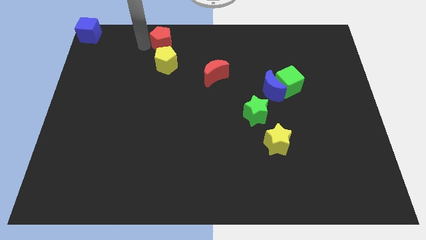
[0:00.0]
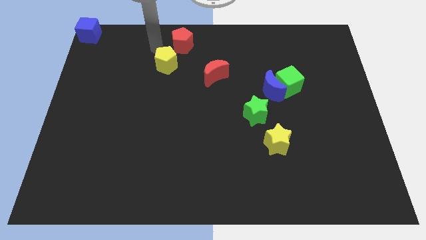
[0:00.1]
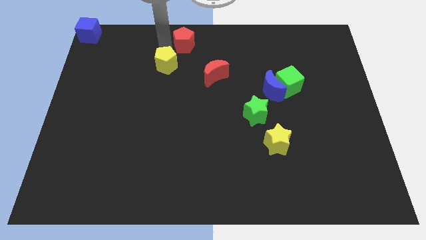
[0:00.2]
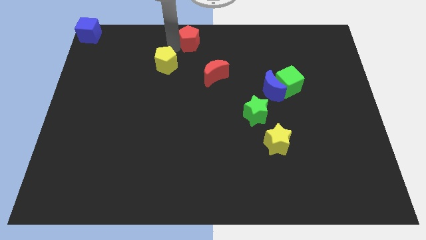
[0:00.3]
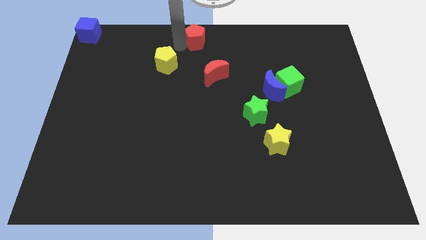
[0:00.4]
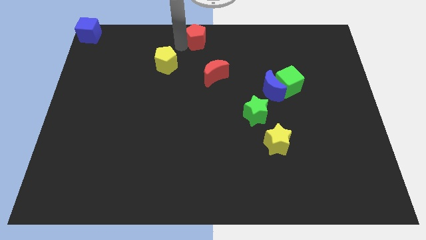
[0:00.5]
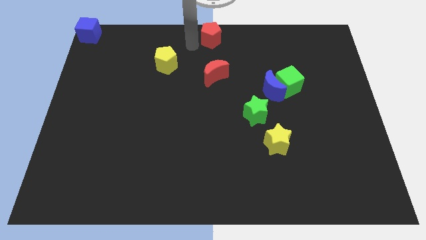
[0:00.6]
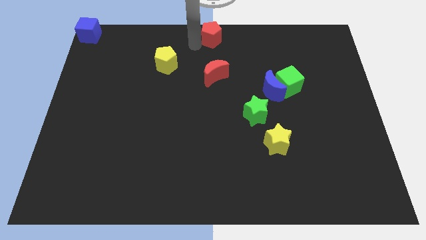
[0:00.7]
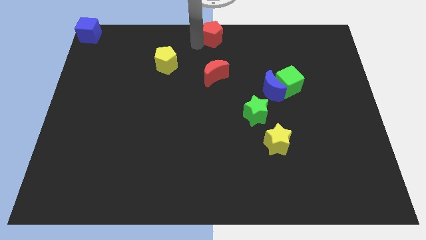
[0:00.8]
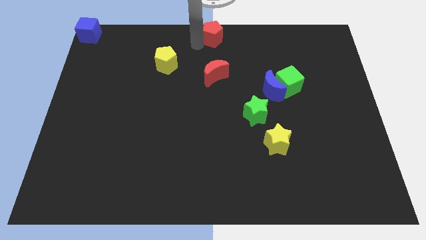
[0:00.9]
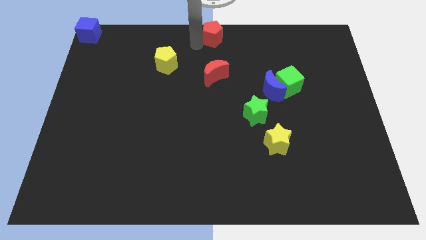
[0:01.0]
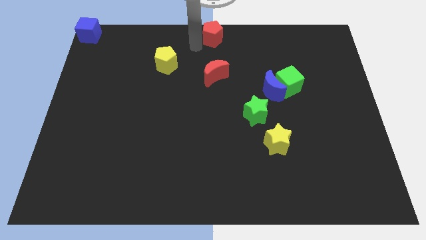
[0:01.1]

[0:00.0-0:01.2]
move the red pentagon towards the top center

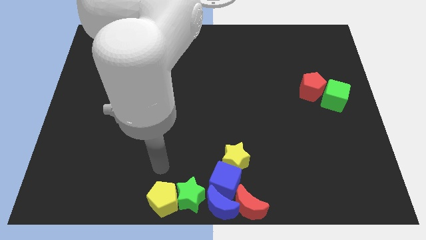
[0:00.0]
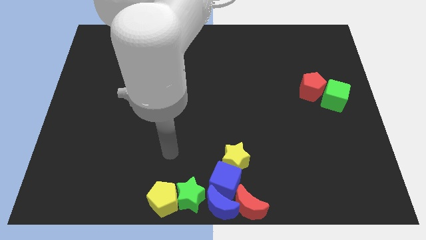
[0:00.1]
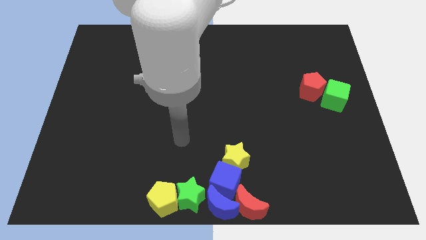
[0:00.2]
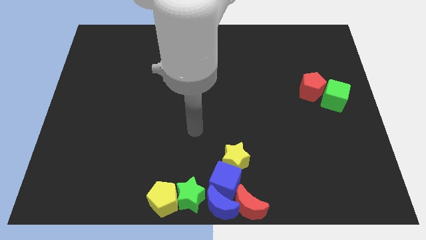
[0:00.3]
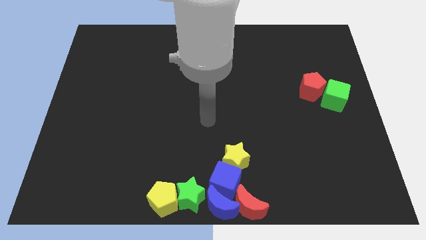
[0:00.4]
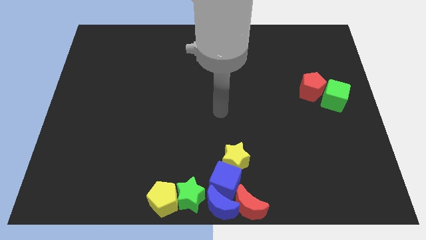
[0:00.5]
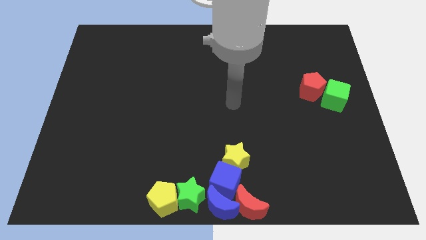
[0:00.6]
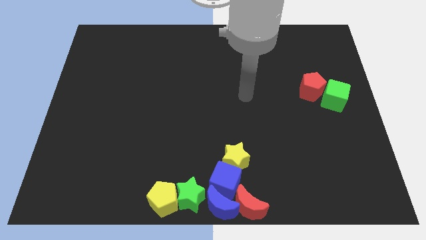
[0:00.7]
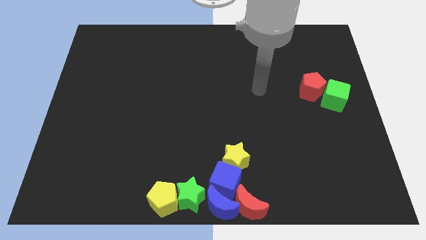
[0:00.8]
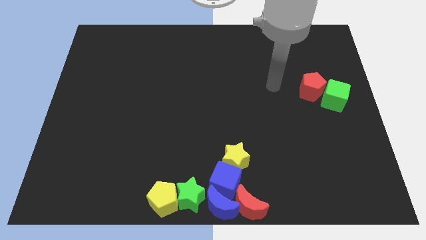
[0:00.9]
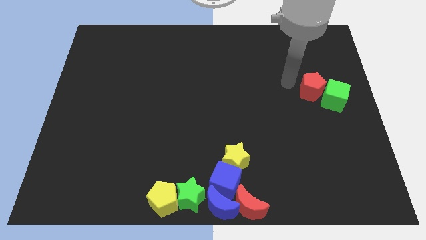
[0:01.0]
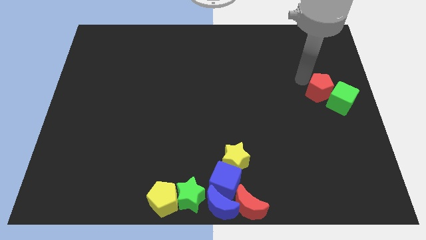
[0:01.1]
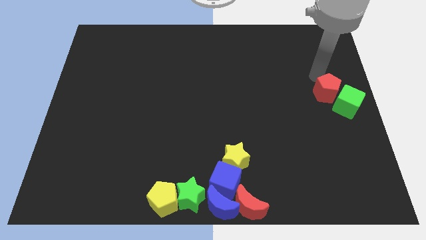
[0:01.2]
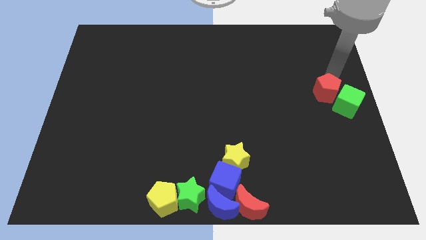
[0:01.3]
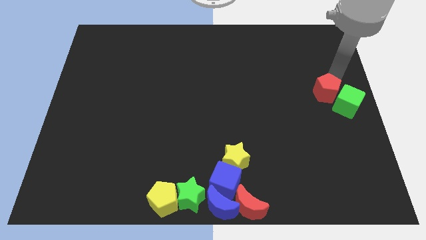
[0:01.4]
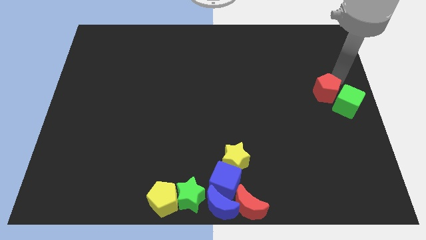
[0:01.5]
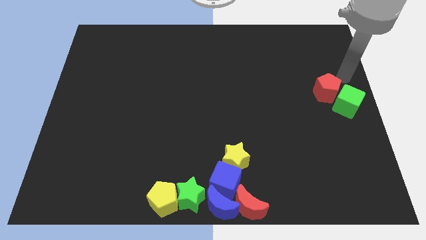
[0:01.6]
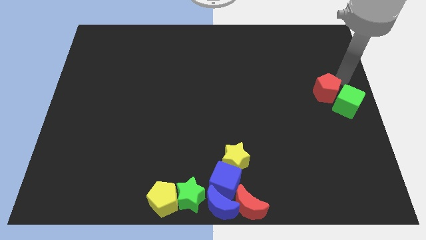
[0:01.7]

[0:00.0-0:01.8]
push the red pentagon and green cube to the right side

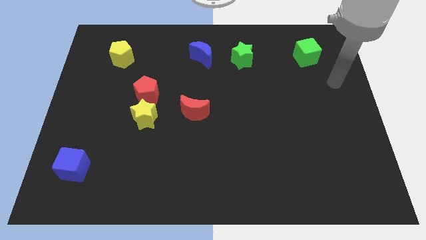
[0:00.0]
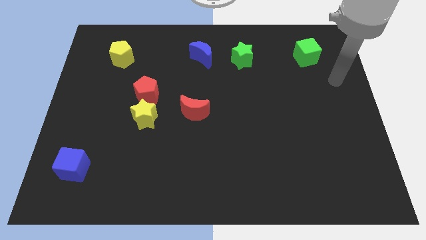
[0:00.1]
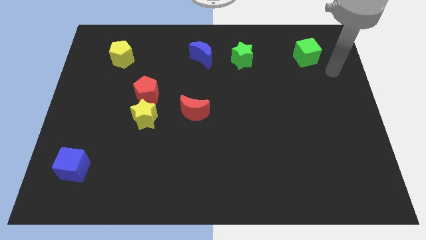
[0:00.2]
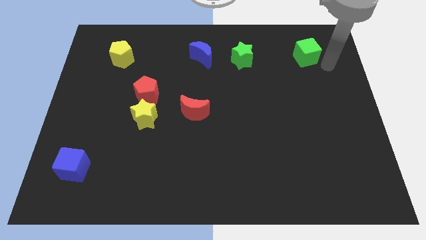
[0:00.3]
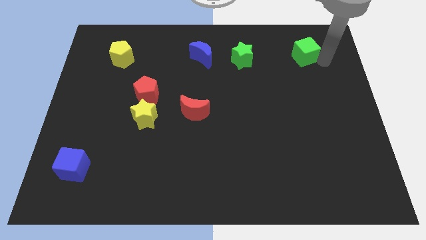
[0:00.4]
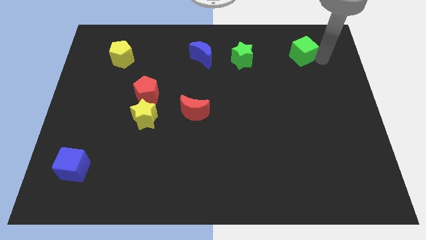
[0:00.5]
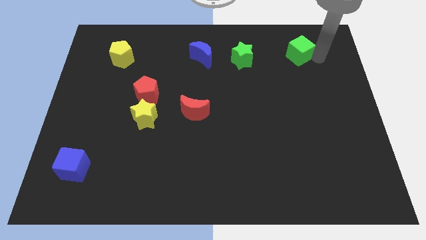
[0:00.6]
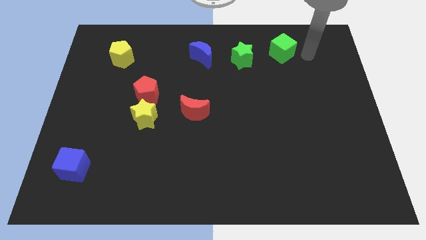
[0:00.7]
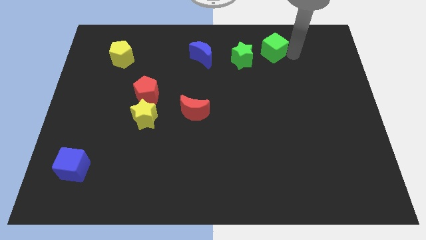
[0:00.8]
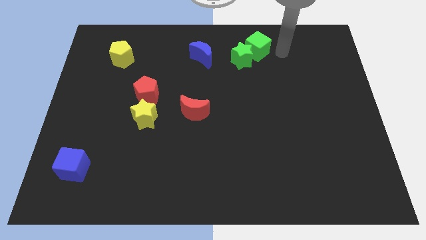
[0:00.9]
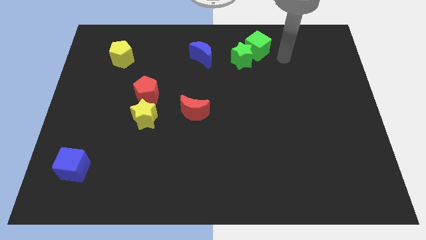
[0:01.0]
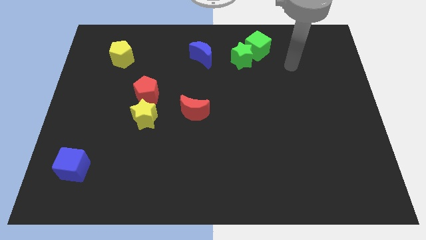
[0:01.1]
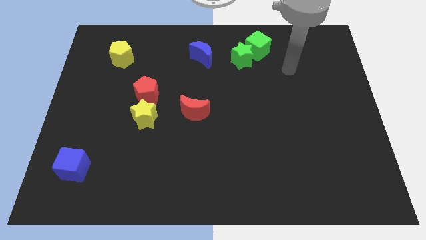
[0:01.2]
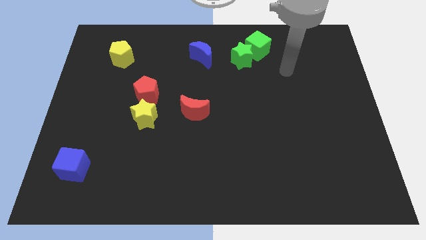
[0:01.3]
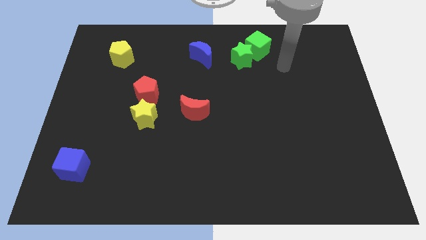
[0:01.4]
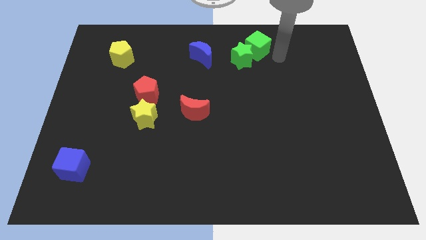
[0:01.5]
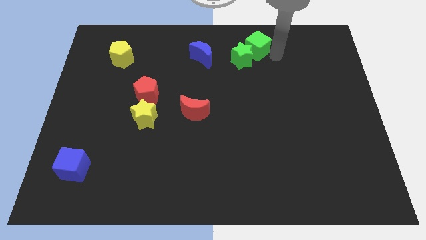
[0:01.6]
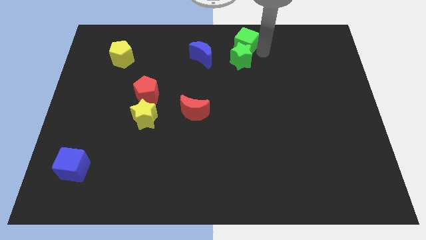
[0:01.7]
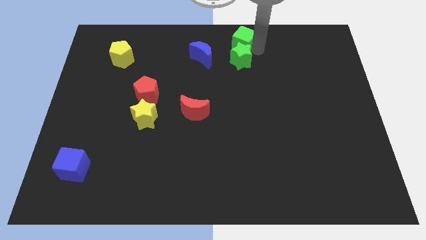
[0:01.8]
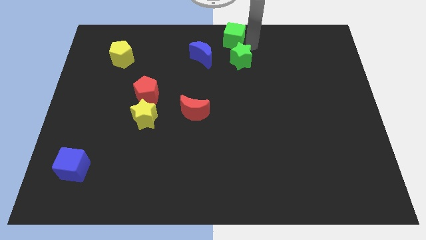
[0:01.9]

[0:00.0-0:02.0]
put the green cube above the green star

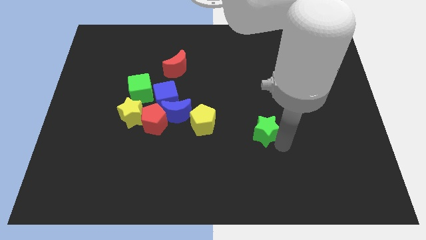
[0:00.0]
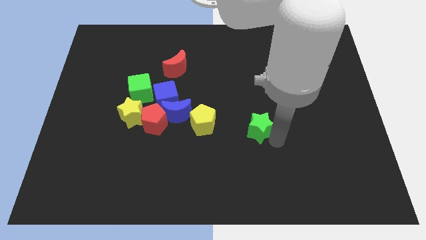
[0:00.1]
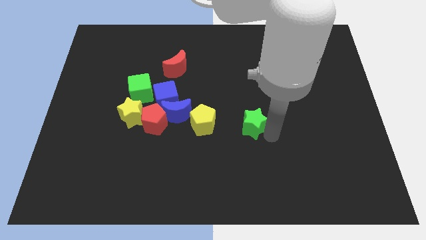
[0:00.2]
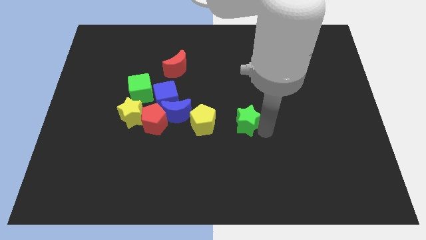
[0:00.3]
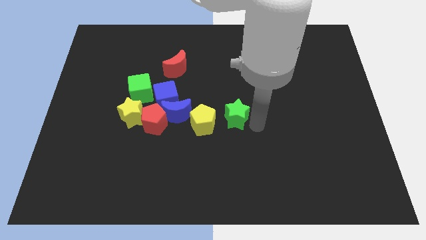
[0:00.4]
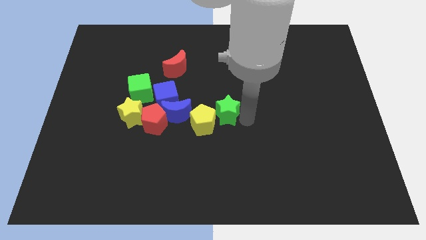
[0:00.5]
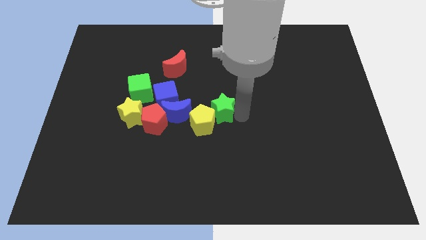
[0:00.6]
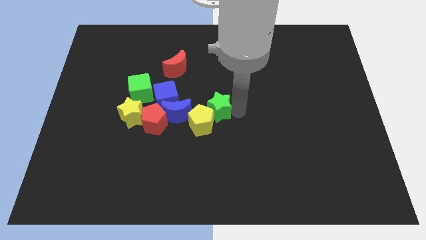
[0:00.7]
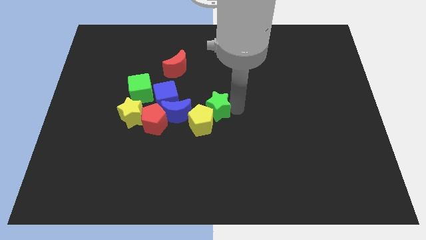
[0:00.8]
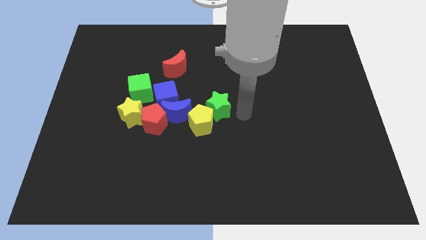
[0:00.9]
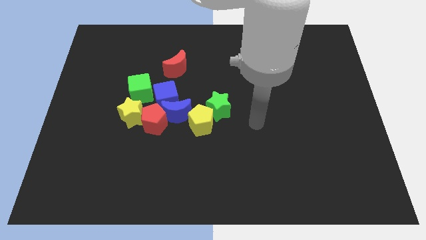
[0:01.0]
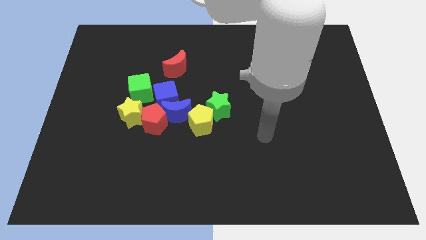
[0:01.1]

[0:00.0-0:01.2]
move the green star into the yellow pentagon

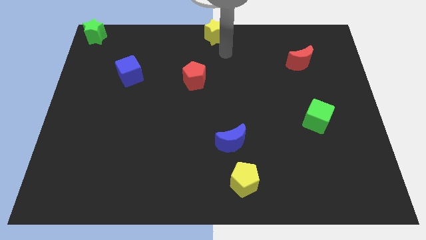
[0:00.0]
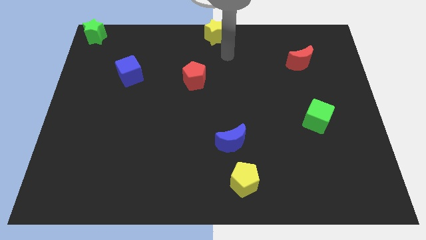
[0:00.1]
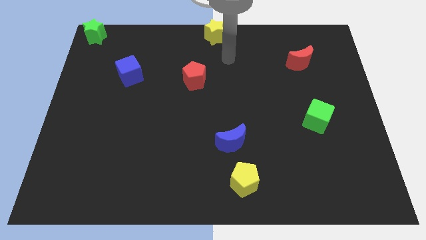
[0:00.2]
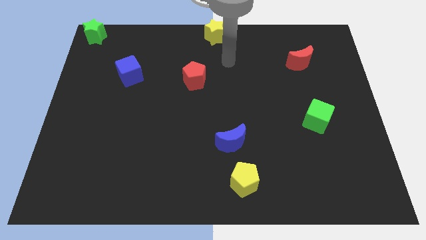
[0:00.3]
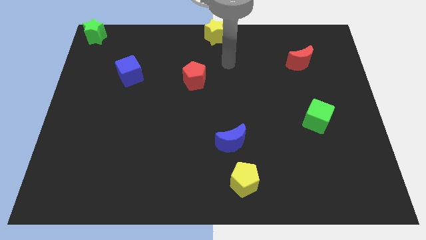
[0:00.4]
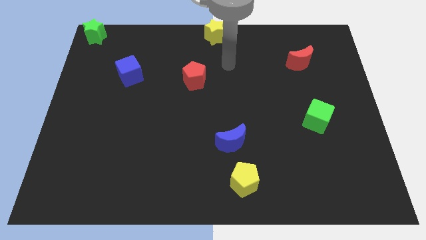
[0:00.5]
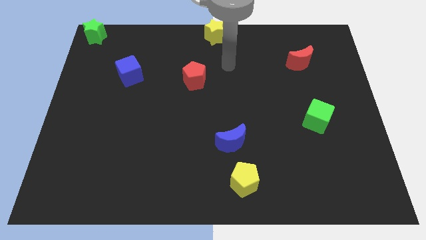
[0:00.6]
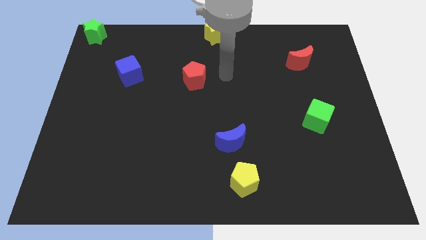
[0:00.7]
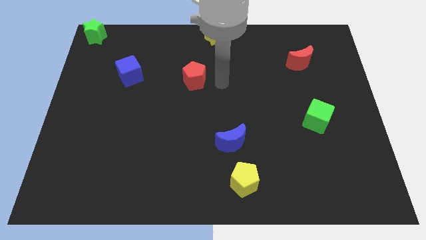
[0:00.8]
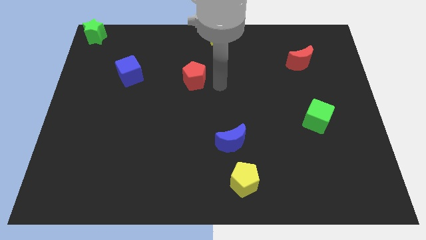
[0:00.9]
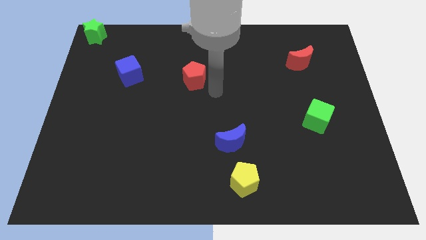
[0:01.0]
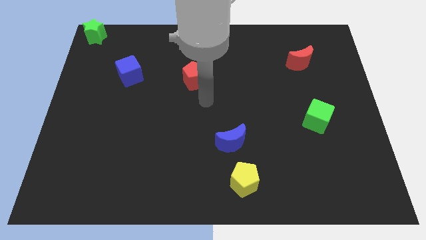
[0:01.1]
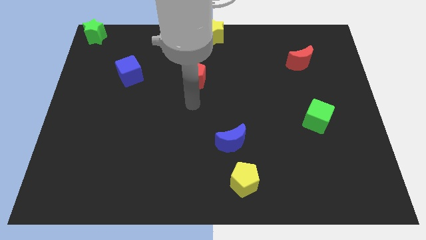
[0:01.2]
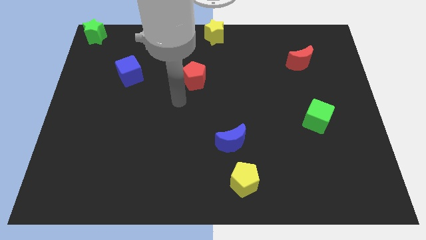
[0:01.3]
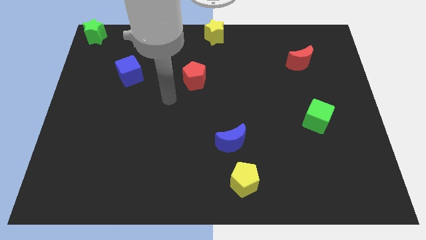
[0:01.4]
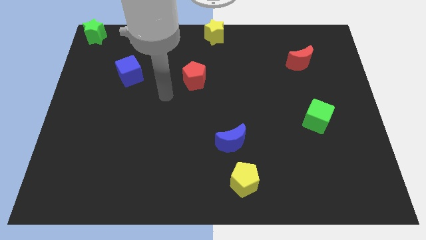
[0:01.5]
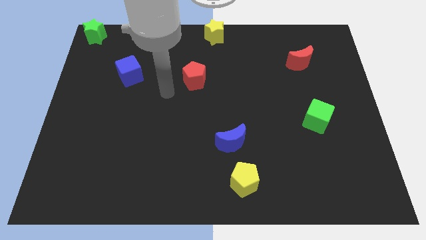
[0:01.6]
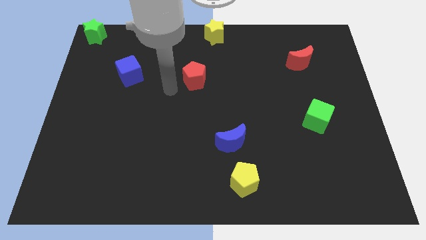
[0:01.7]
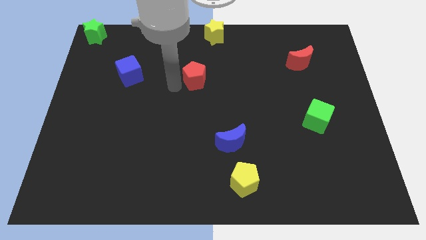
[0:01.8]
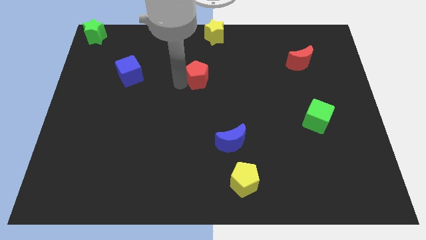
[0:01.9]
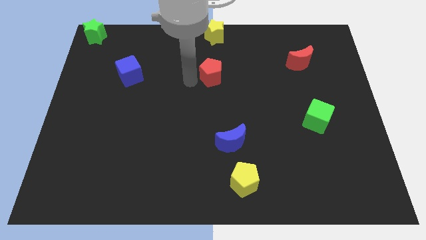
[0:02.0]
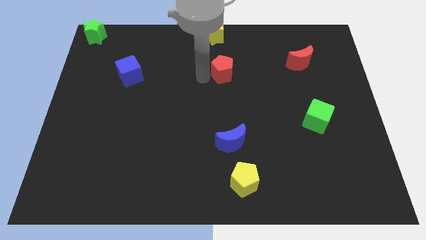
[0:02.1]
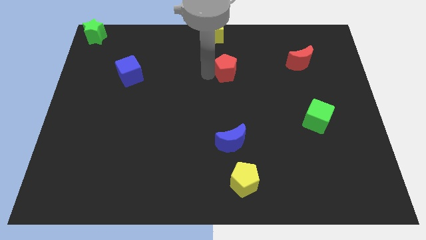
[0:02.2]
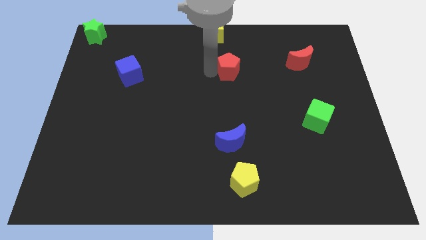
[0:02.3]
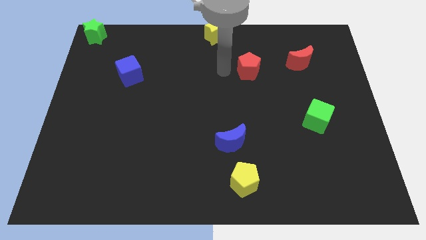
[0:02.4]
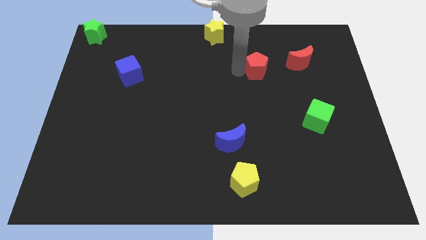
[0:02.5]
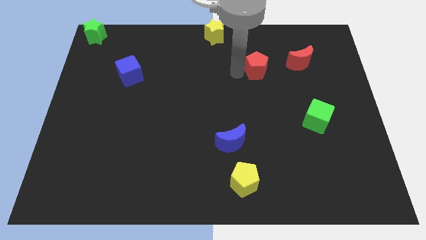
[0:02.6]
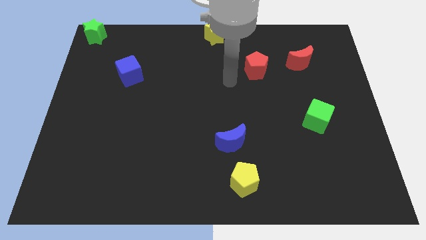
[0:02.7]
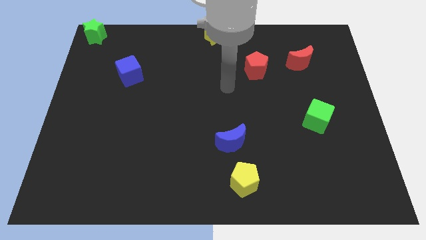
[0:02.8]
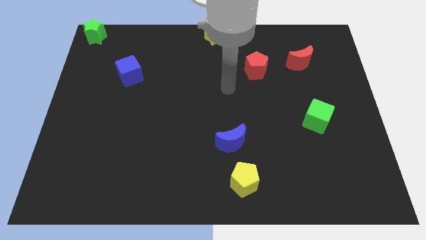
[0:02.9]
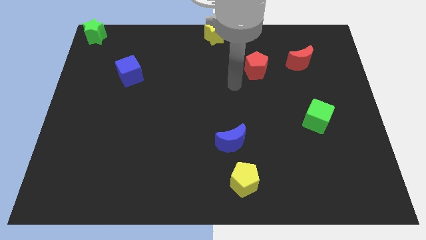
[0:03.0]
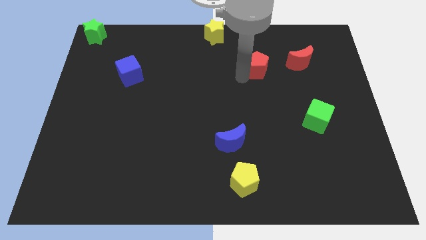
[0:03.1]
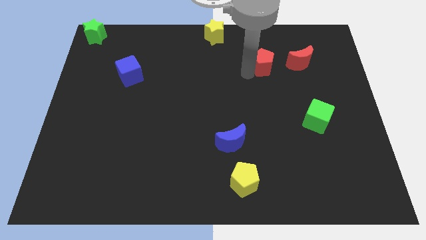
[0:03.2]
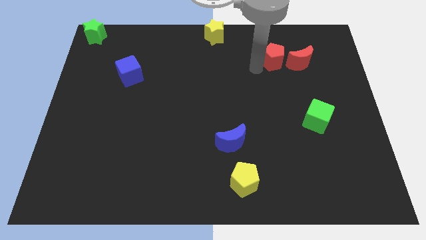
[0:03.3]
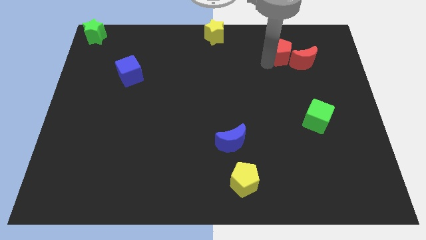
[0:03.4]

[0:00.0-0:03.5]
drag the red pentagon into the red moon
